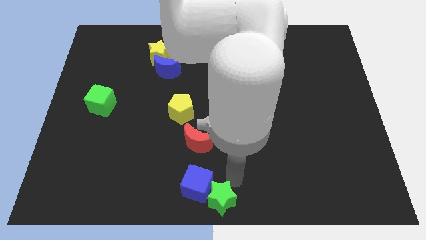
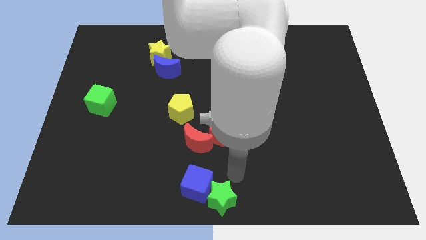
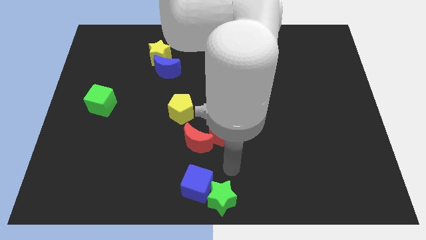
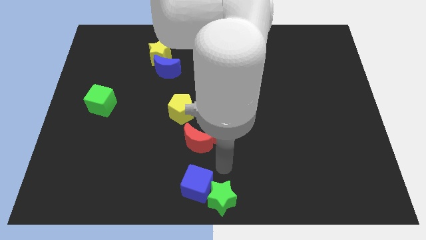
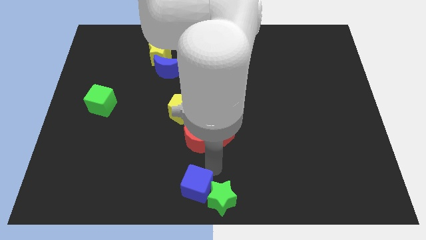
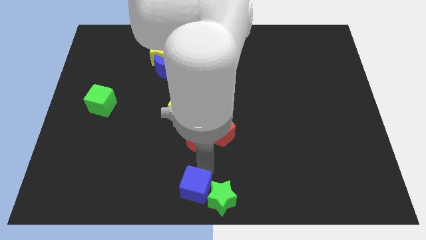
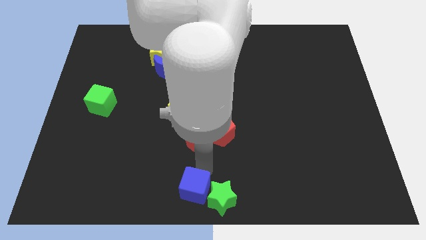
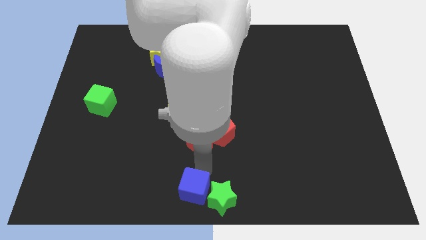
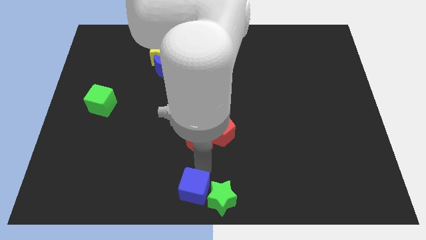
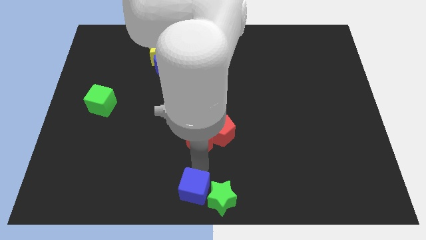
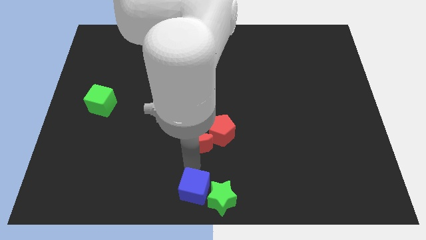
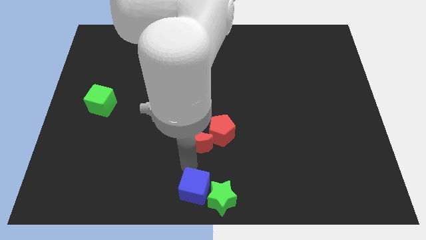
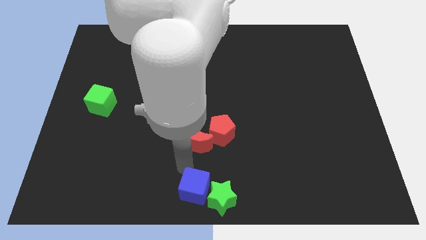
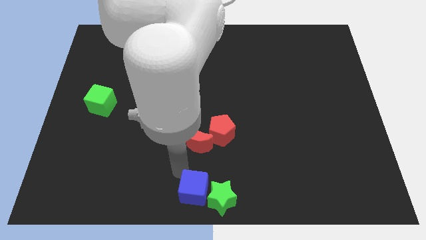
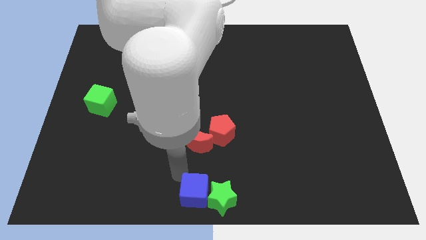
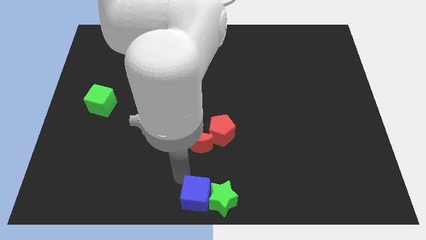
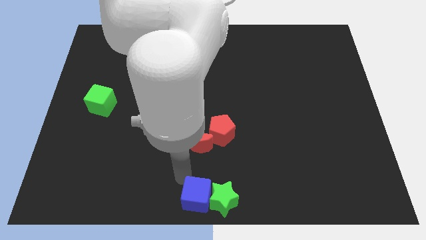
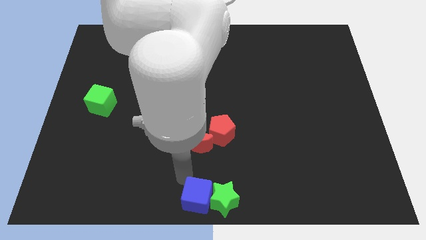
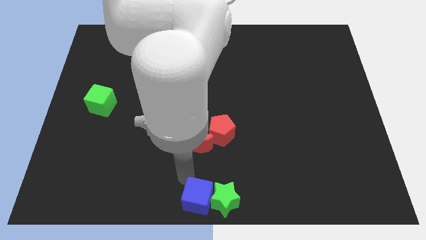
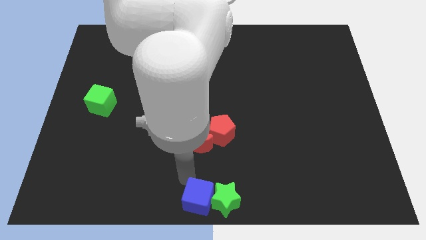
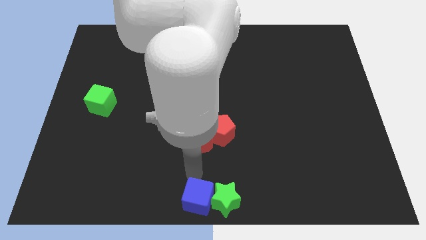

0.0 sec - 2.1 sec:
push the blue cube to the left of green star at the bottom center of the board

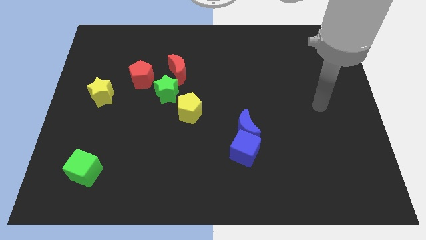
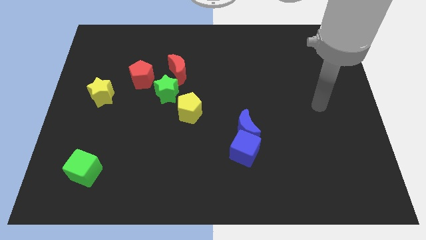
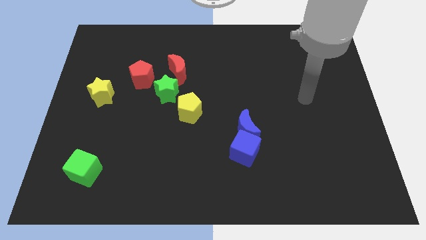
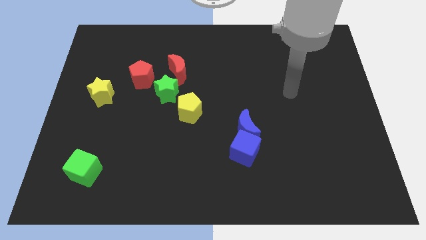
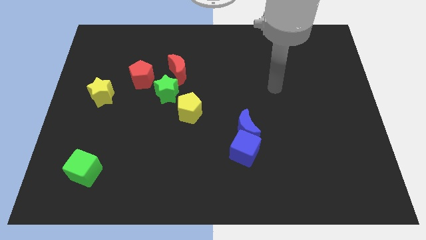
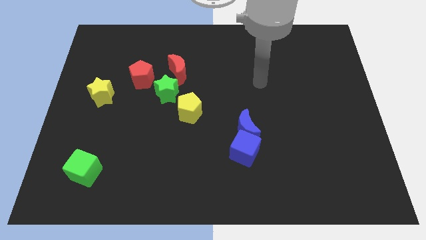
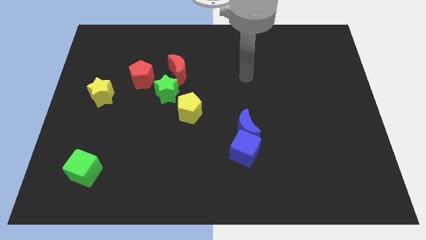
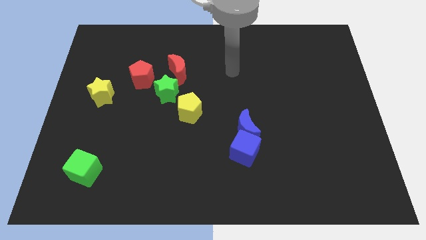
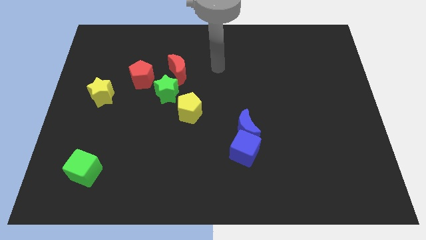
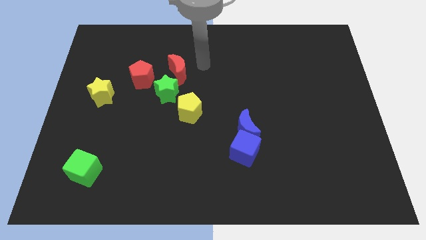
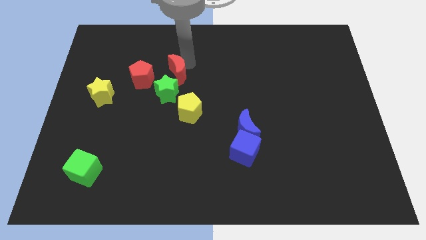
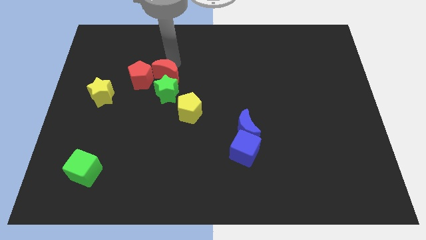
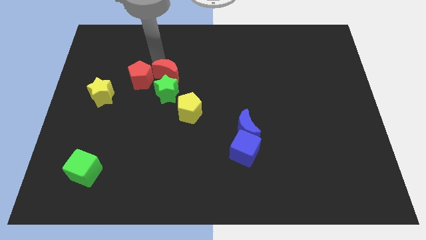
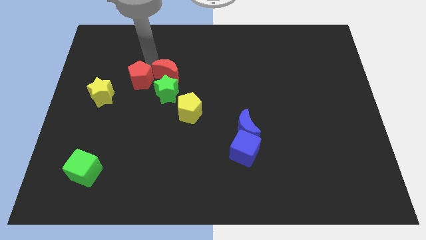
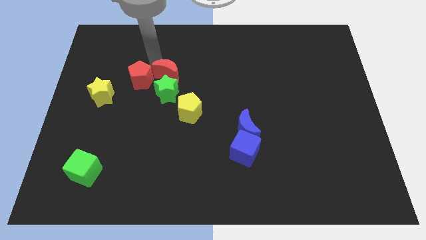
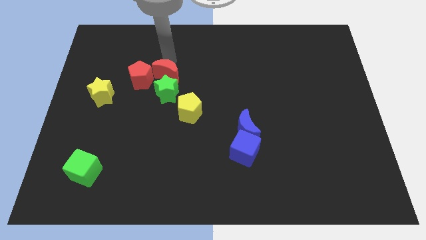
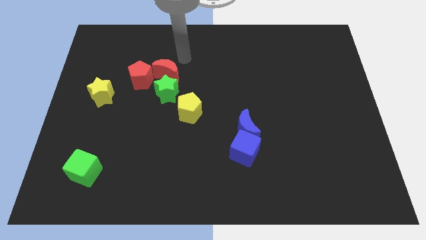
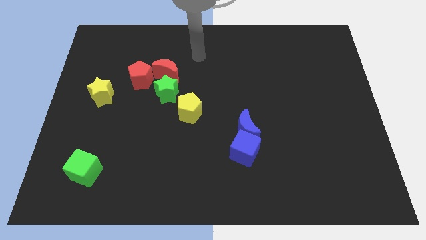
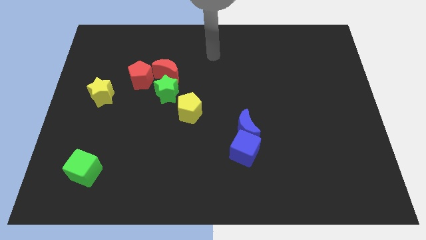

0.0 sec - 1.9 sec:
slightly push the red crescent towards the red pentagon

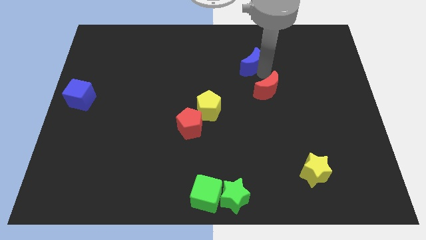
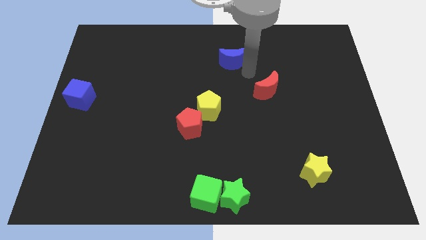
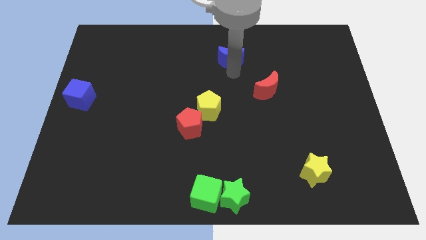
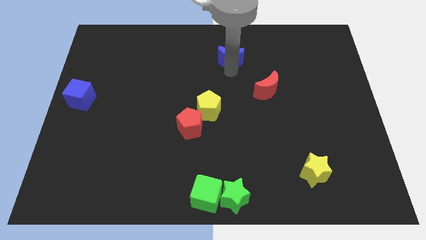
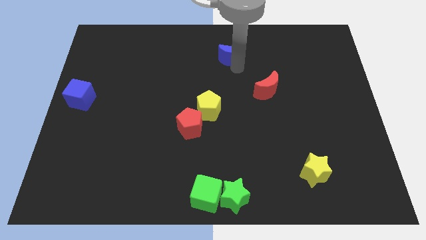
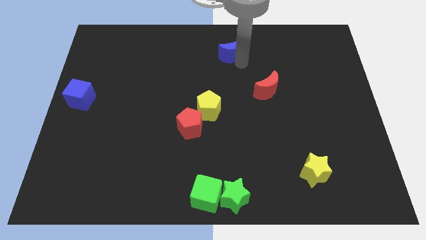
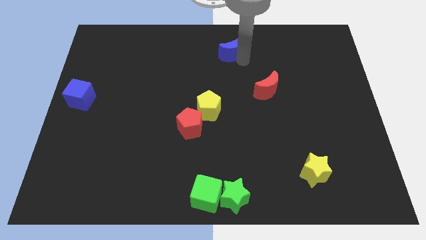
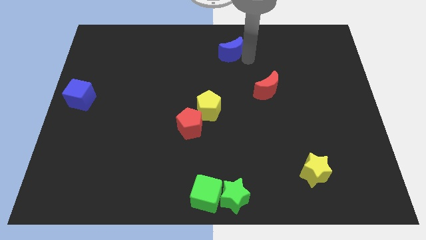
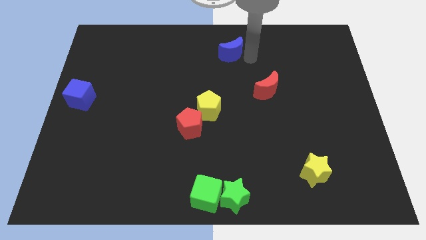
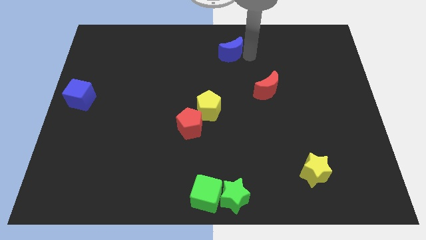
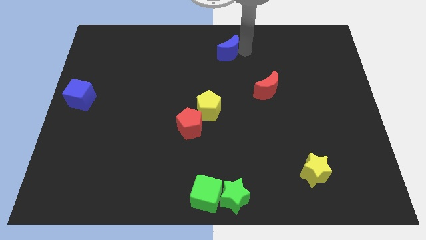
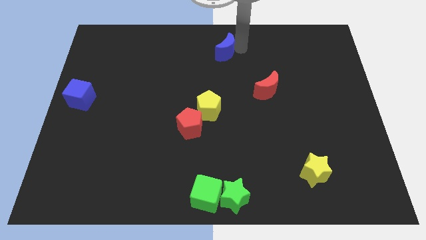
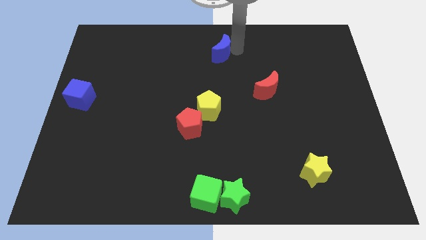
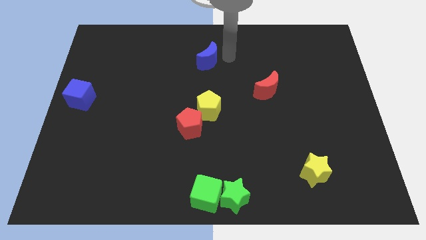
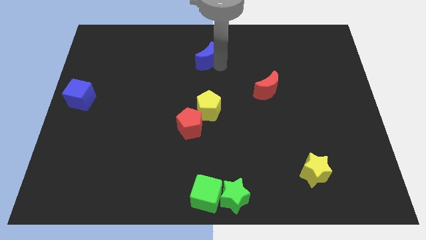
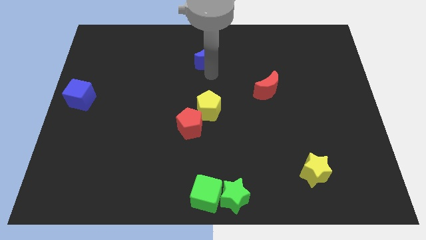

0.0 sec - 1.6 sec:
place the blue moon above the yellow pentagon

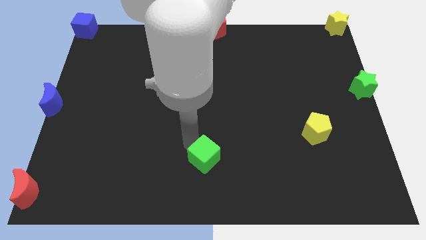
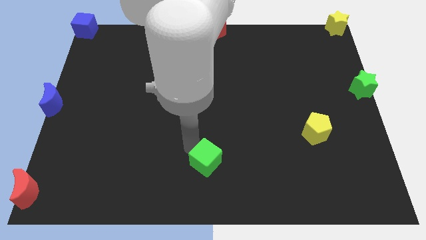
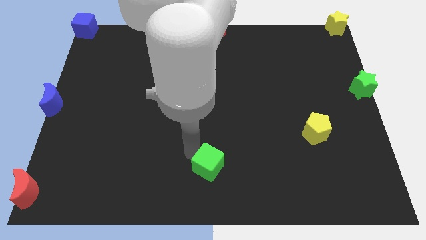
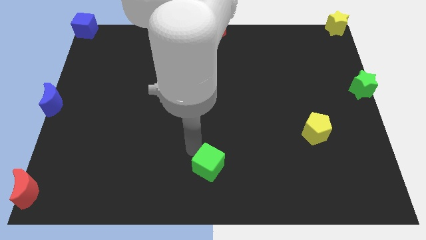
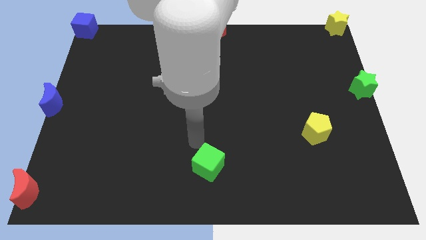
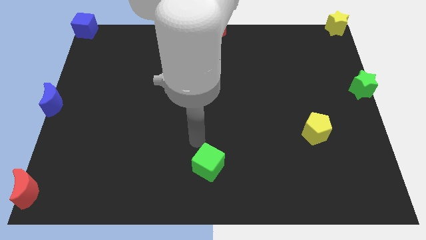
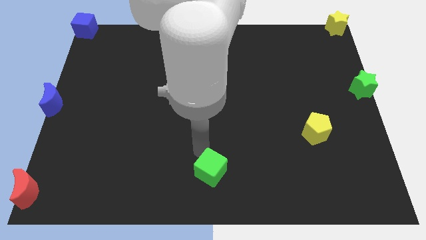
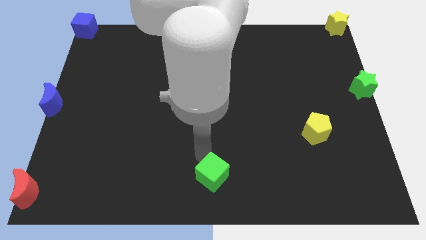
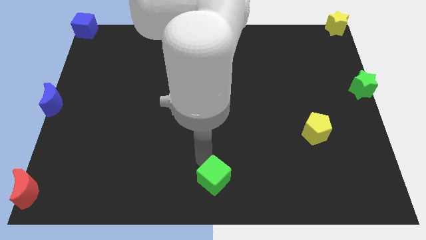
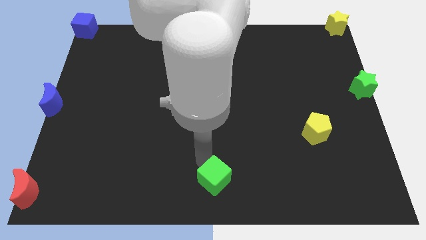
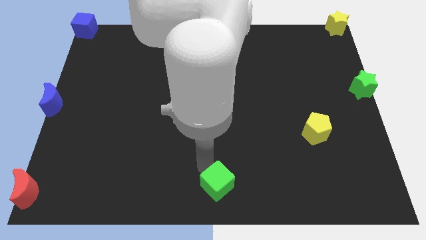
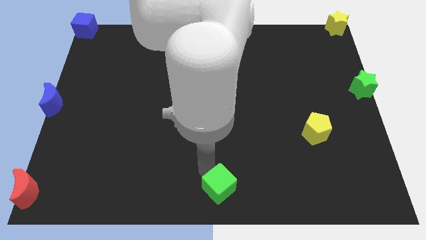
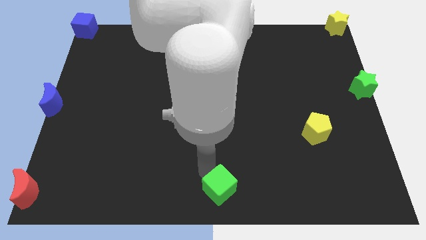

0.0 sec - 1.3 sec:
drag the green cube towards the bottom center

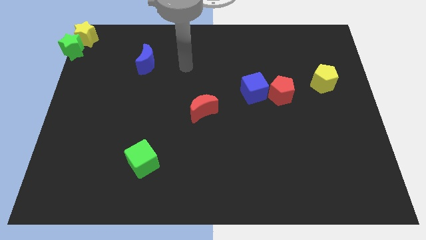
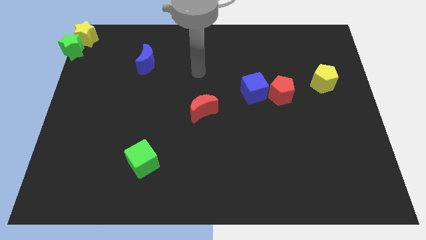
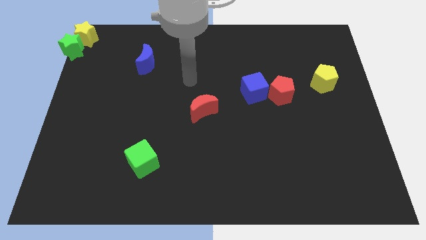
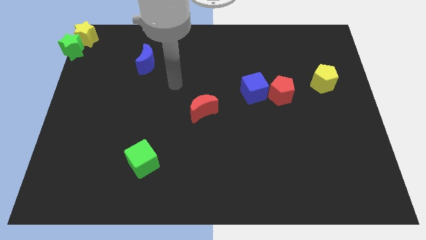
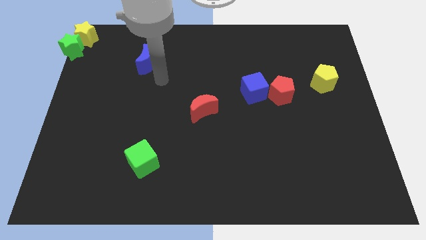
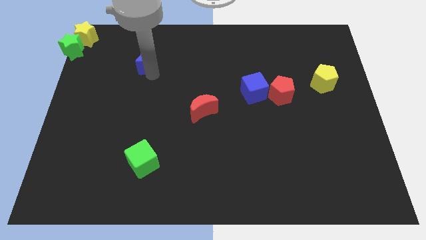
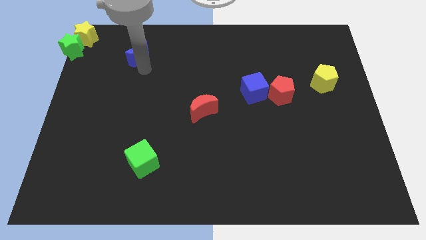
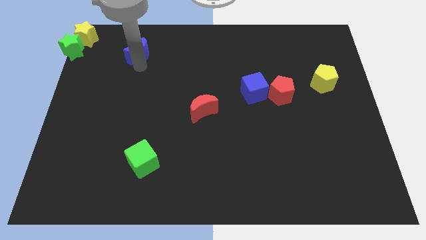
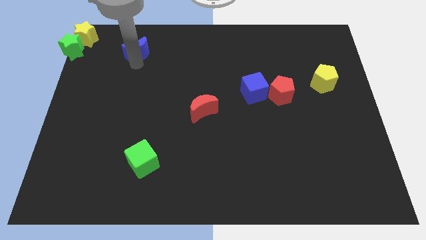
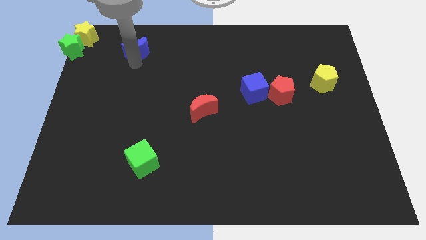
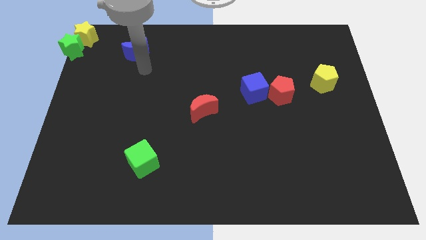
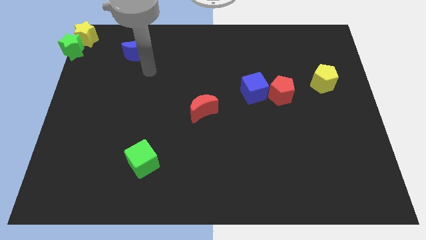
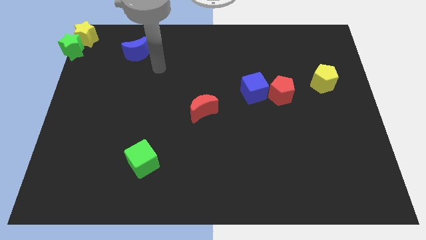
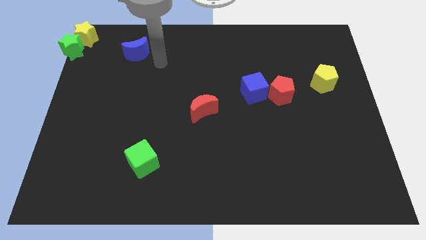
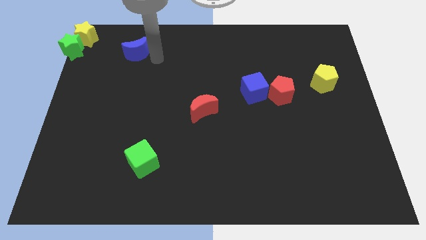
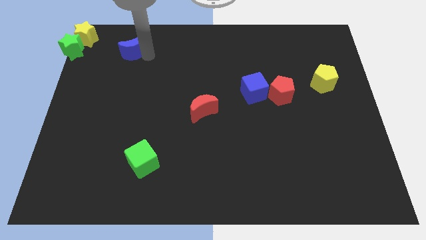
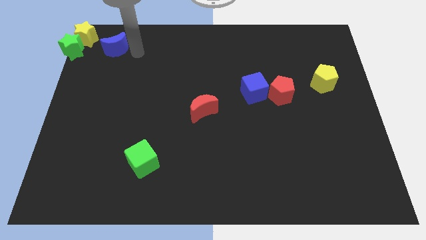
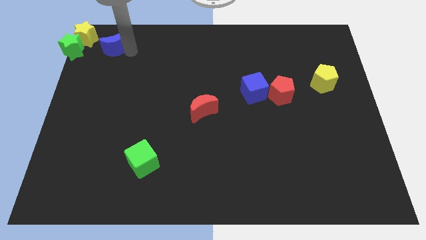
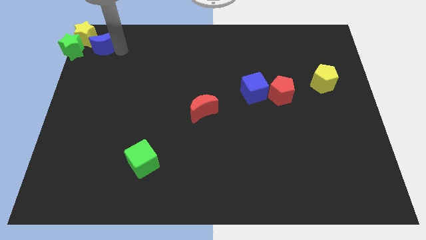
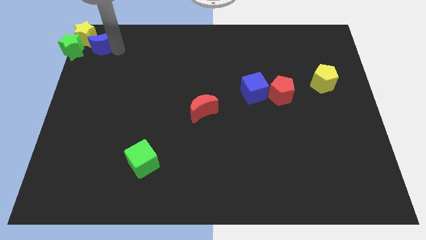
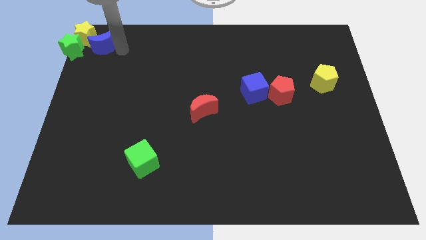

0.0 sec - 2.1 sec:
move the blue crescent to the right of the yellow star

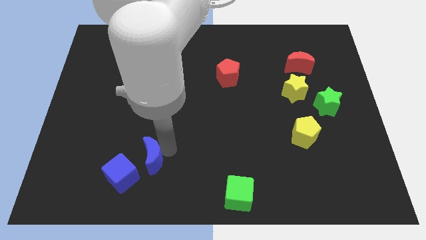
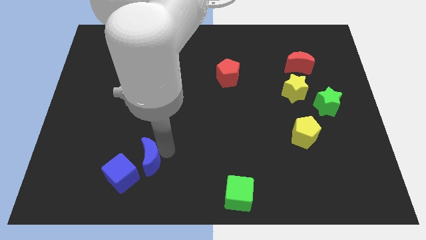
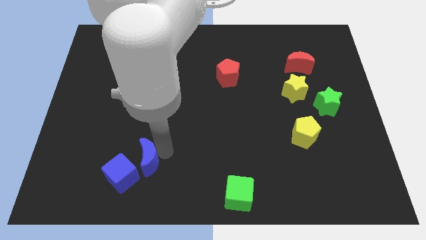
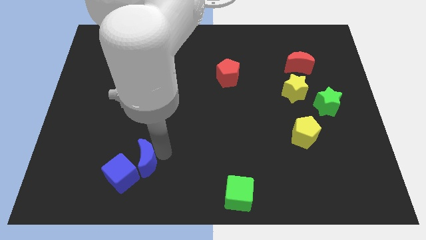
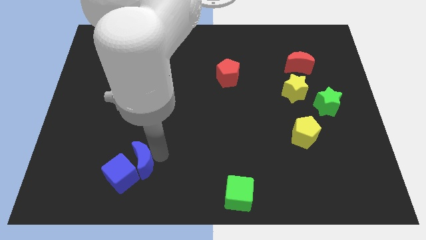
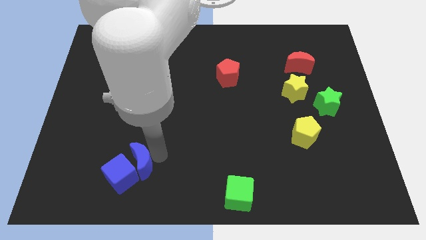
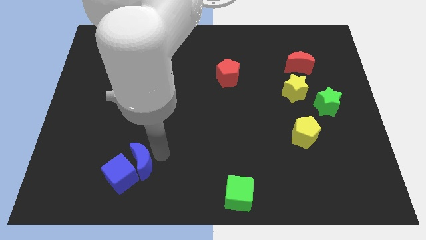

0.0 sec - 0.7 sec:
push blue moon towards blue cube
